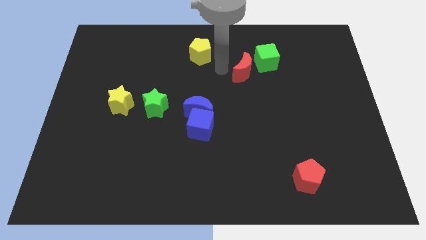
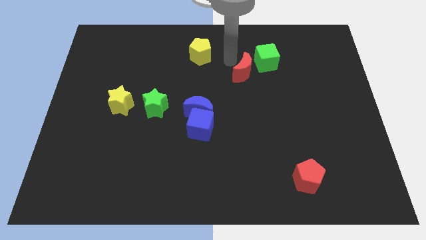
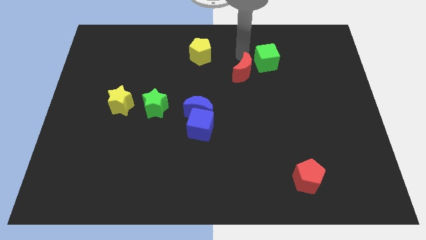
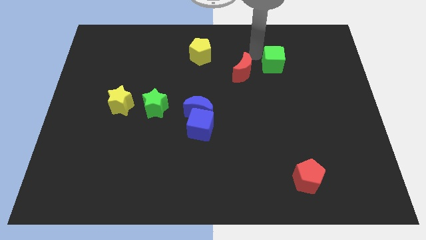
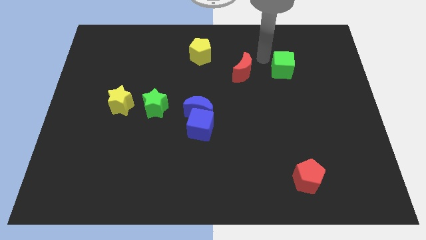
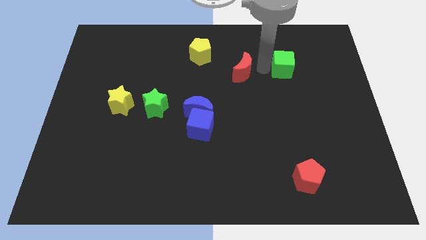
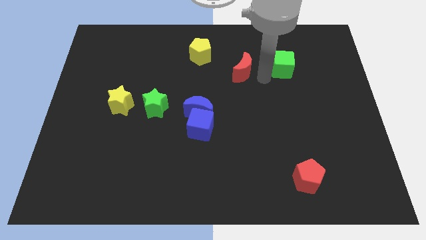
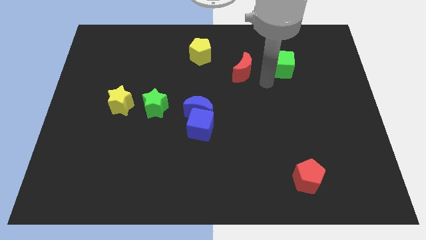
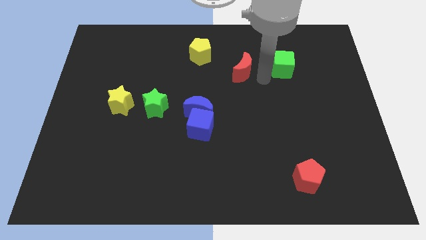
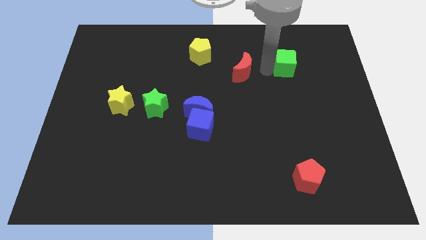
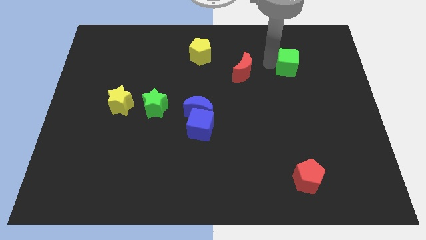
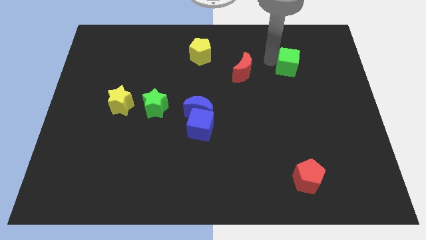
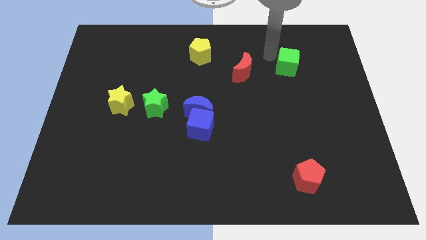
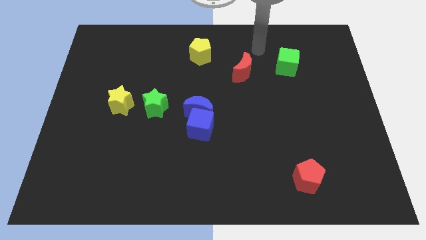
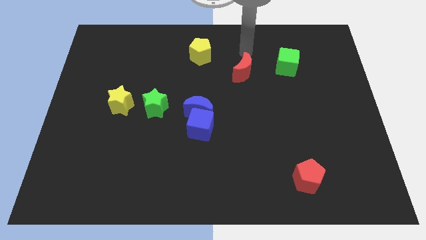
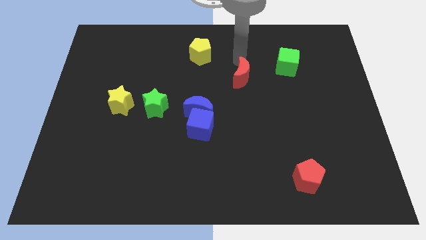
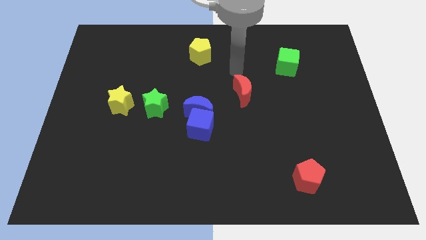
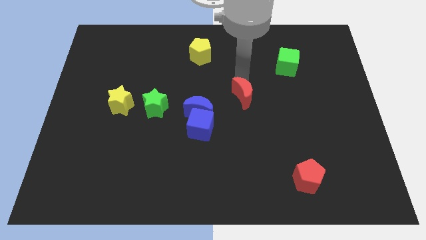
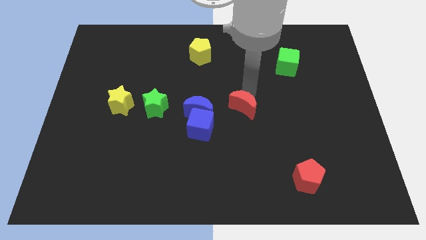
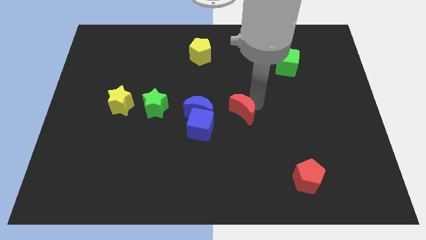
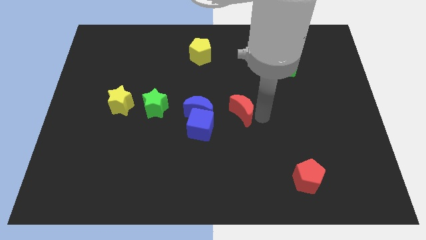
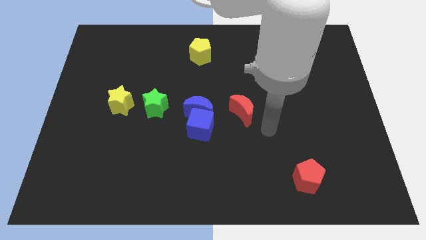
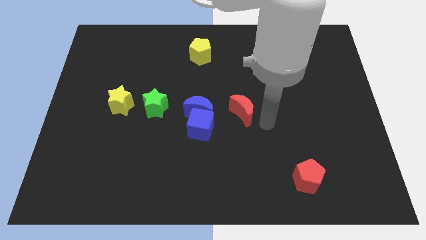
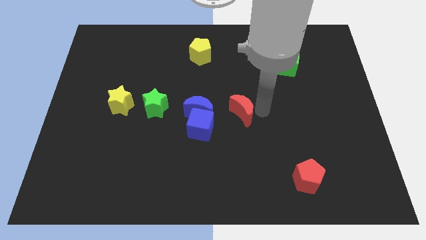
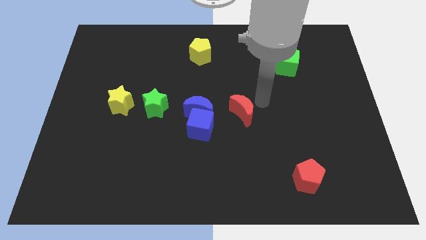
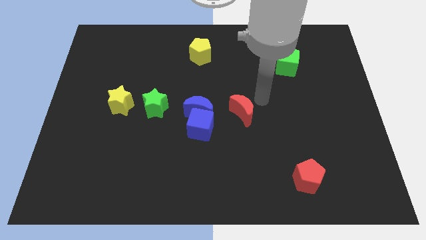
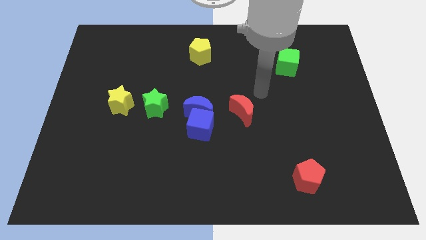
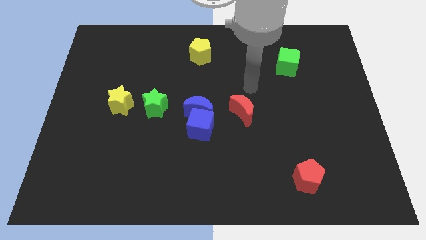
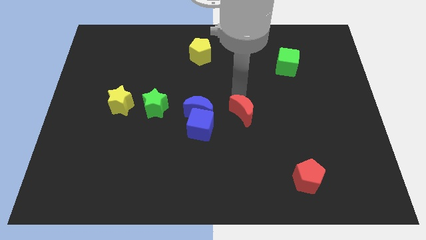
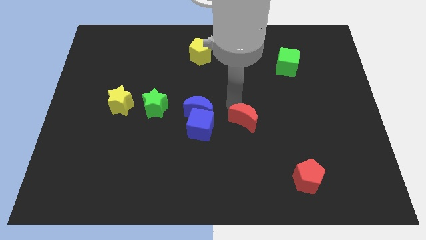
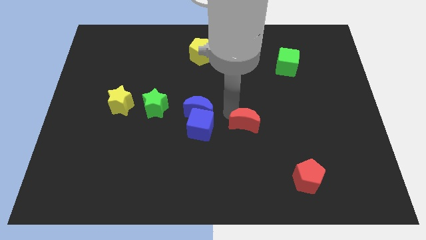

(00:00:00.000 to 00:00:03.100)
move the red moon diagonal top left to red pentagon

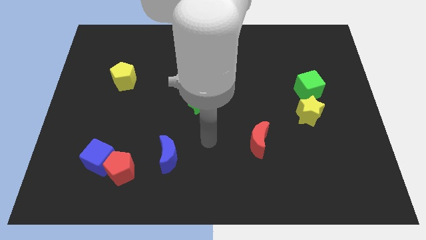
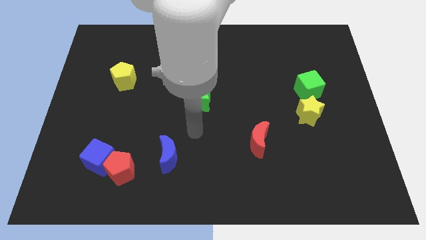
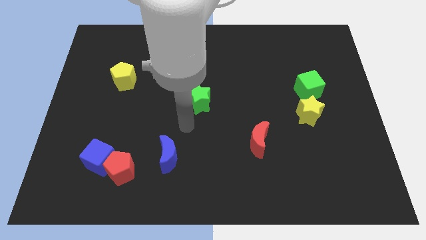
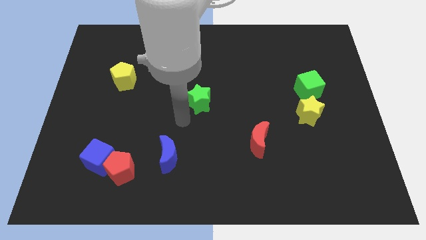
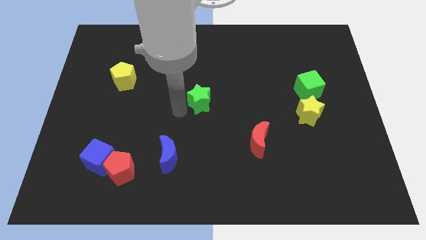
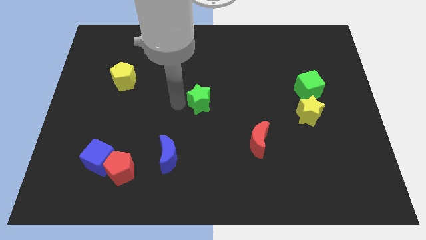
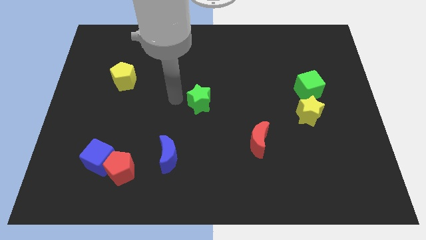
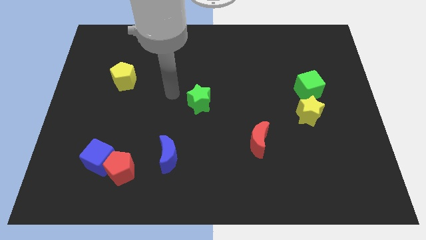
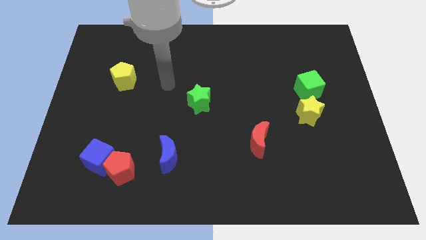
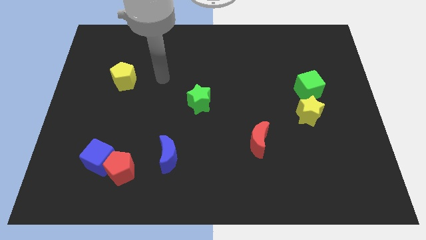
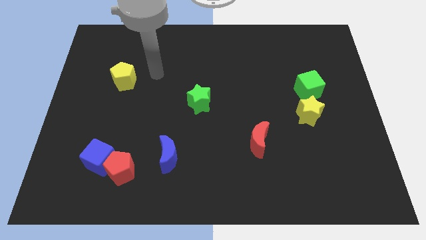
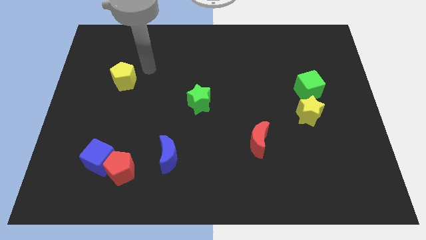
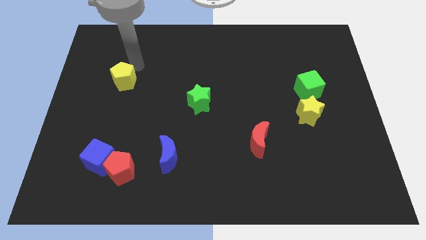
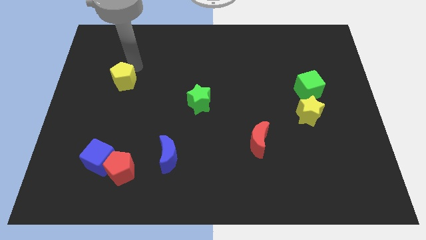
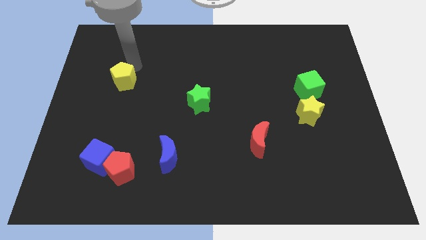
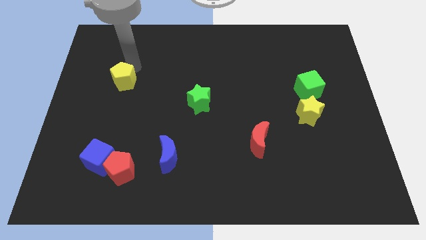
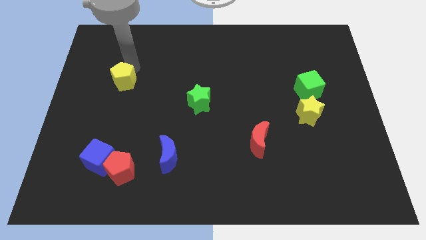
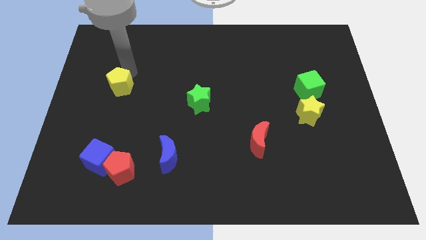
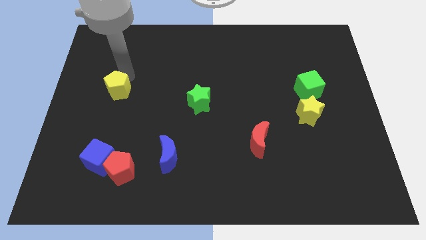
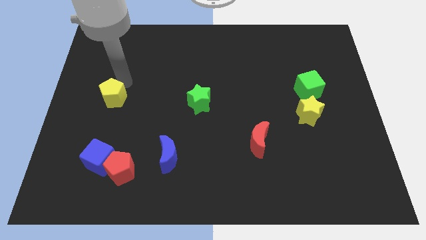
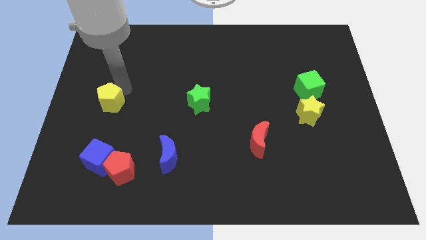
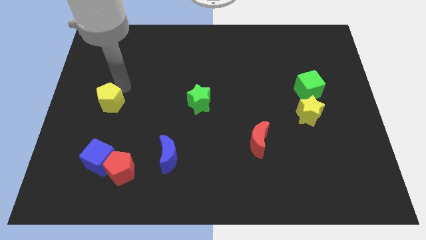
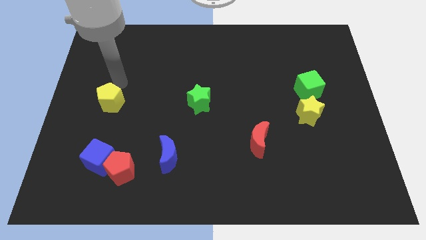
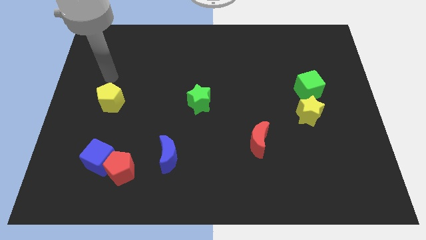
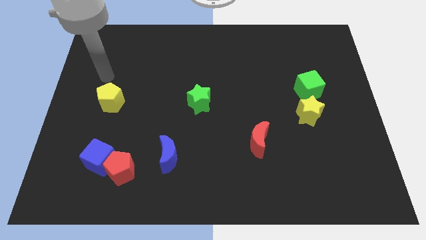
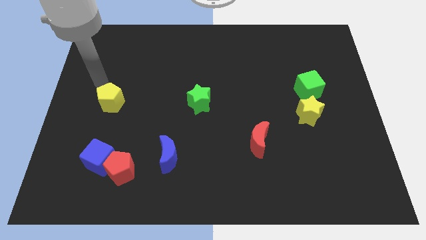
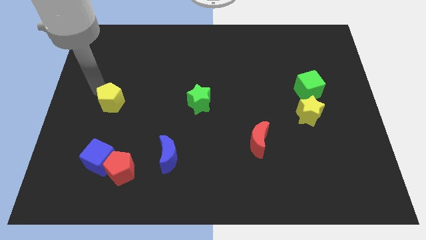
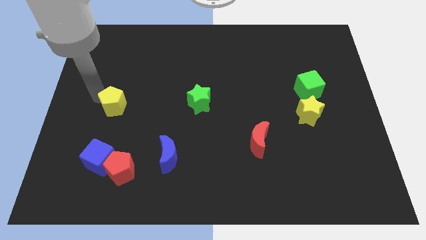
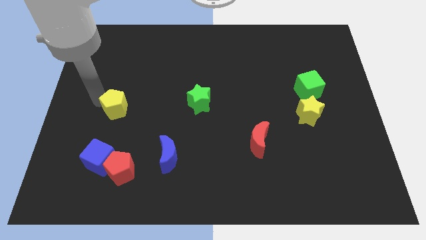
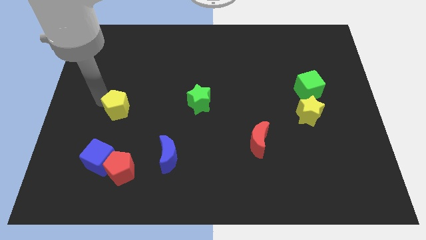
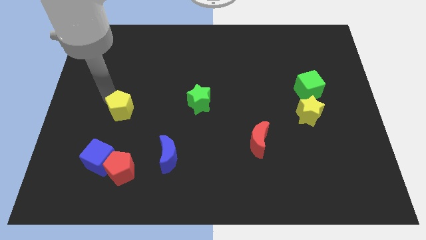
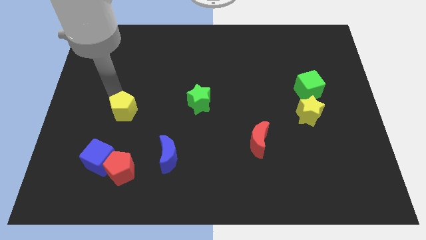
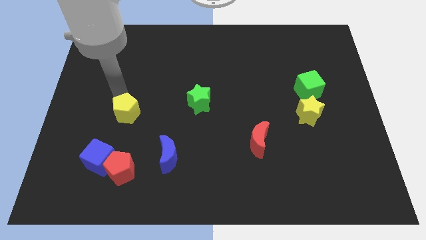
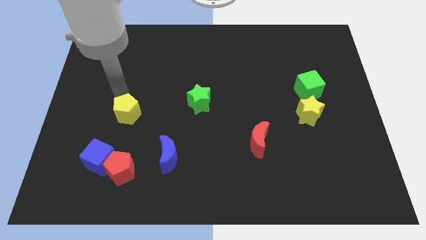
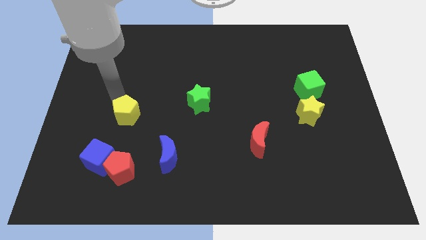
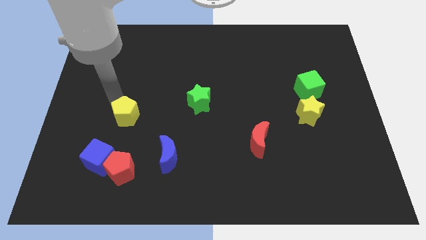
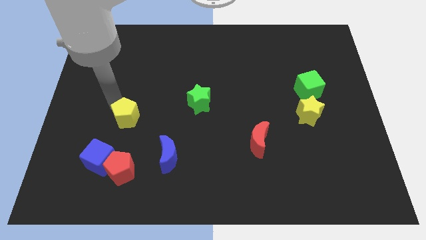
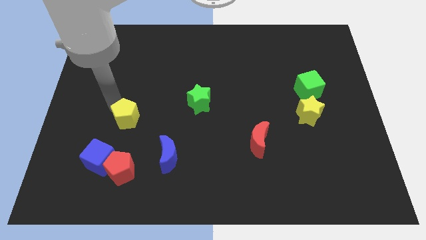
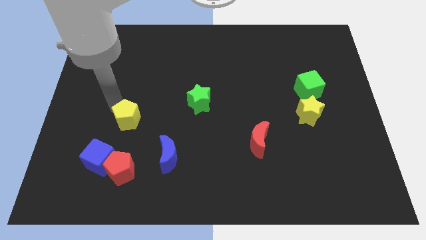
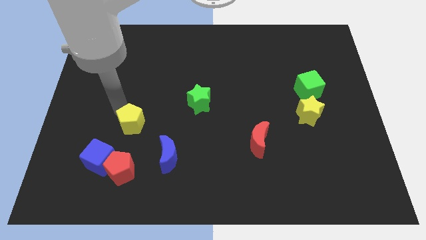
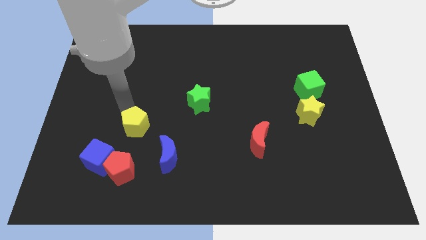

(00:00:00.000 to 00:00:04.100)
move the yellow pentagon towards the blue crescent

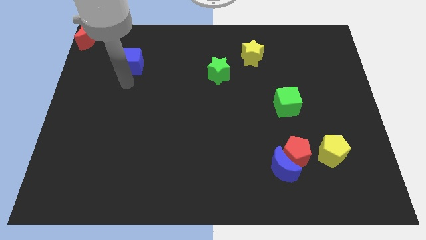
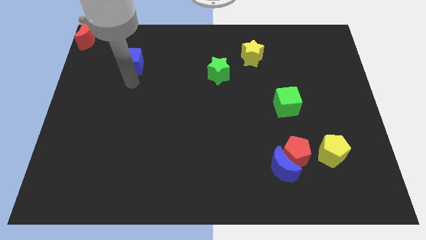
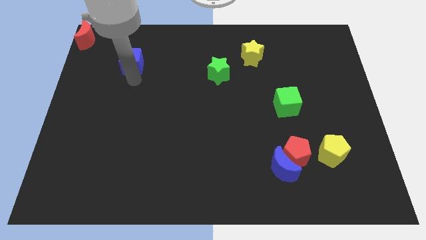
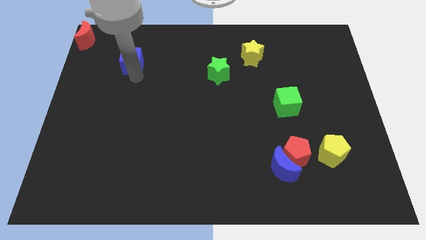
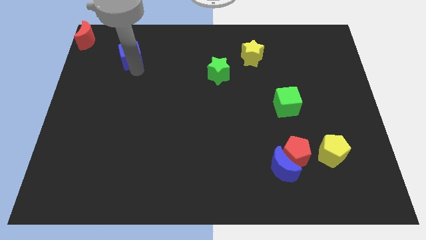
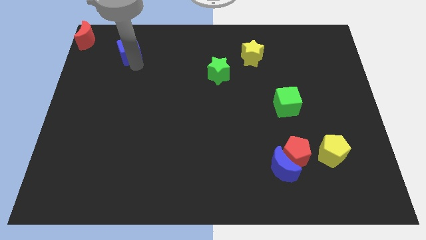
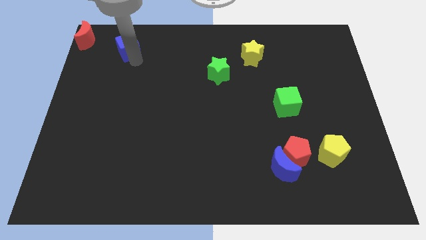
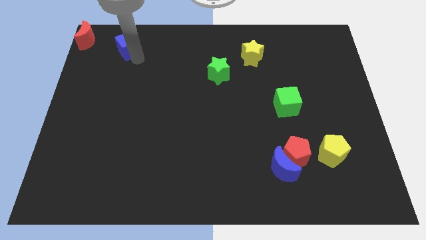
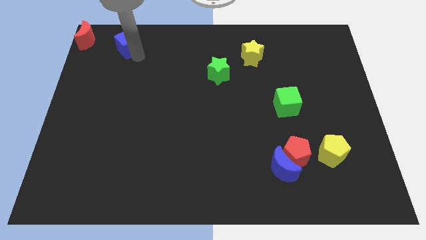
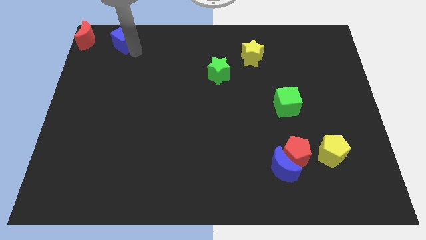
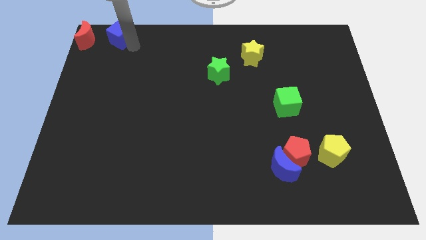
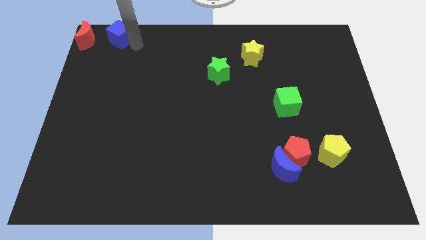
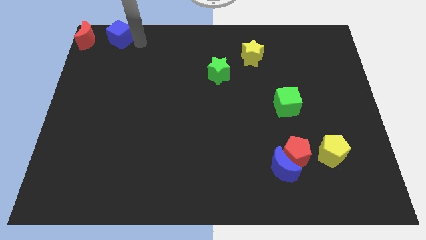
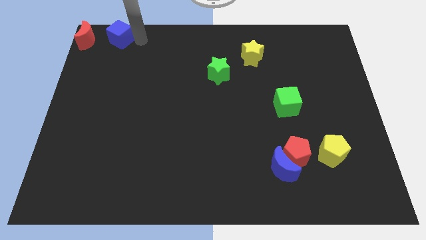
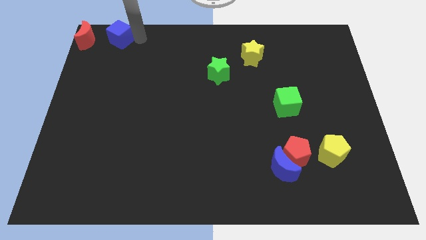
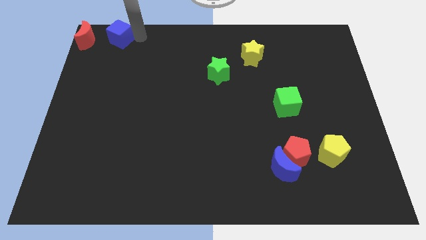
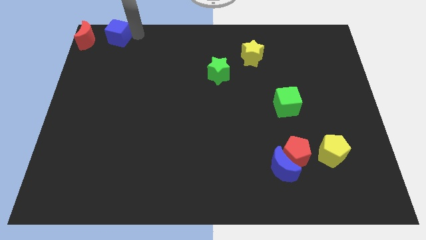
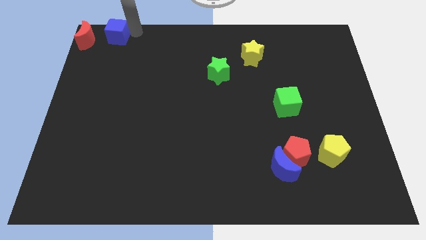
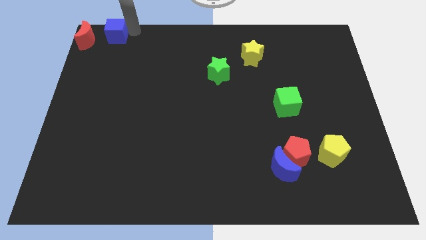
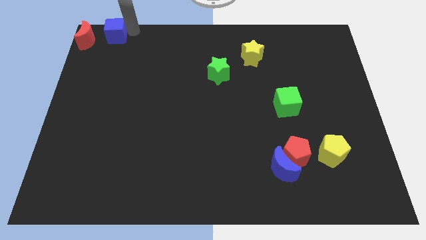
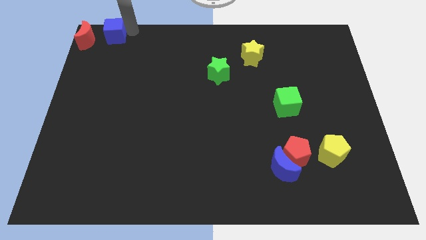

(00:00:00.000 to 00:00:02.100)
move blue cube to the top left
